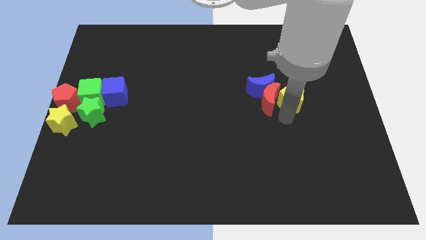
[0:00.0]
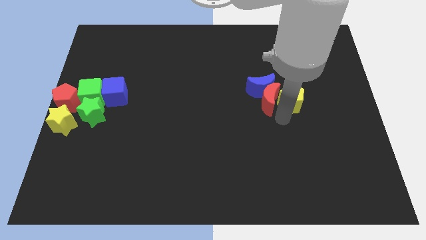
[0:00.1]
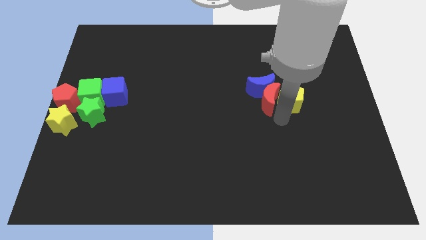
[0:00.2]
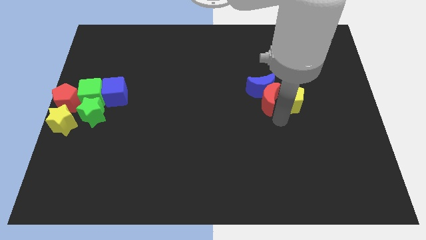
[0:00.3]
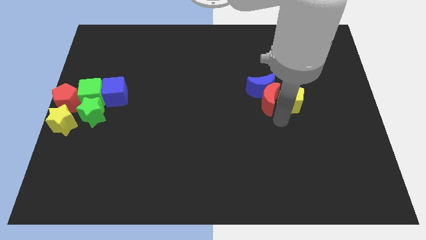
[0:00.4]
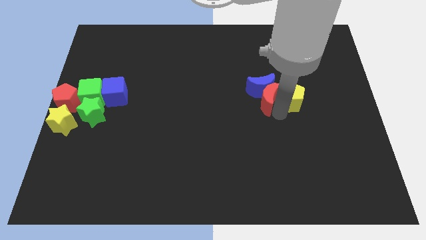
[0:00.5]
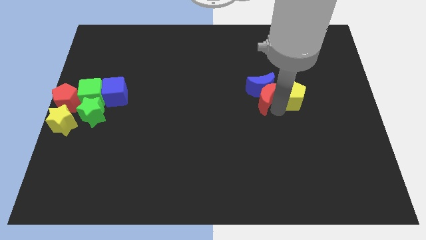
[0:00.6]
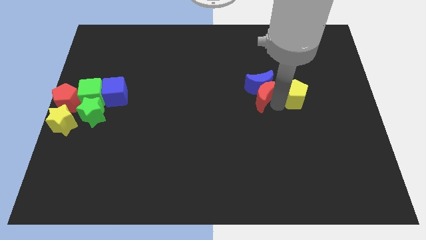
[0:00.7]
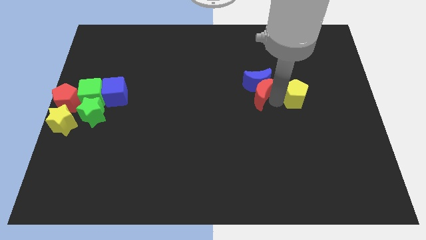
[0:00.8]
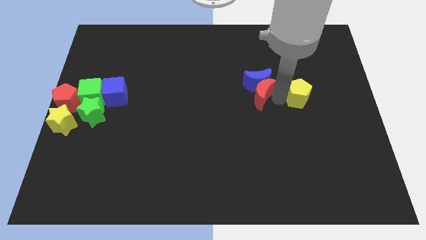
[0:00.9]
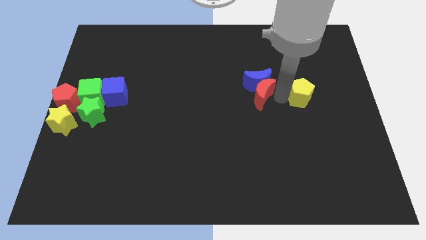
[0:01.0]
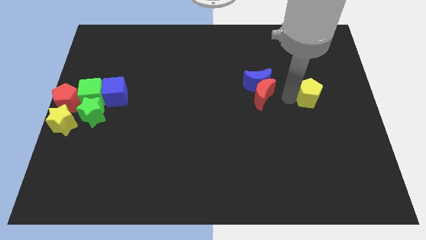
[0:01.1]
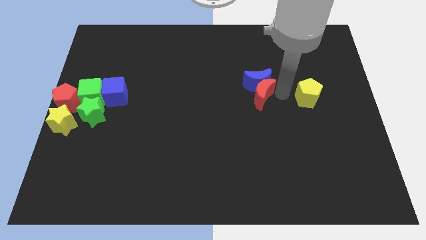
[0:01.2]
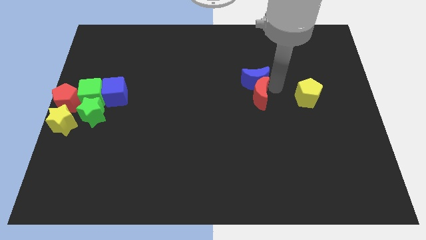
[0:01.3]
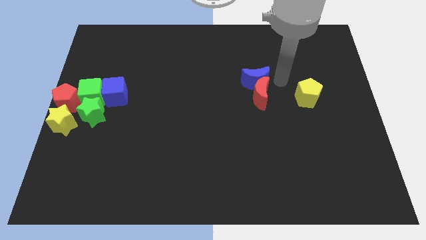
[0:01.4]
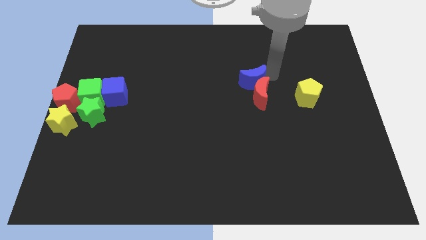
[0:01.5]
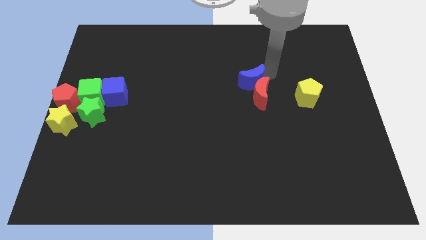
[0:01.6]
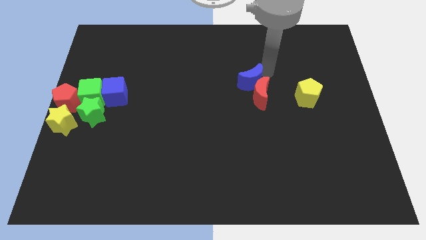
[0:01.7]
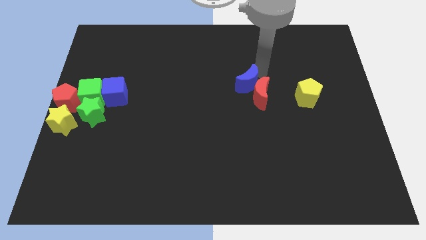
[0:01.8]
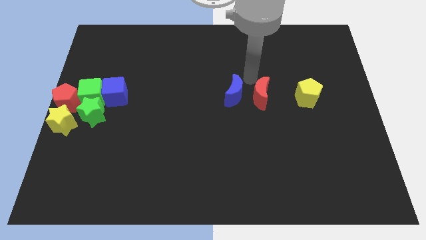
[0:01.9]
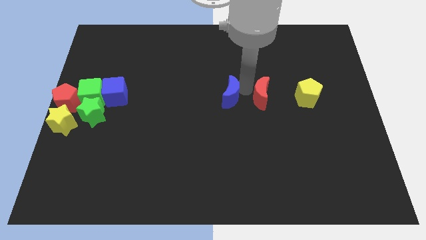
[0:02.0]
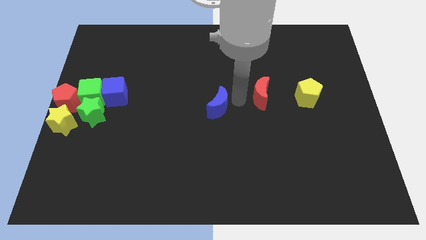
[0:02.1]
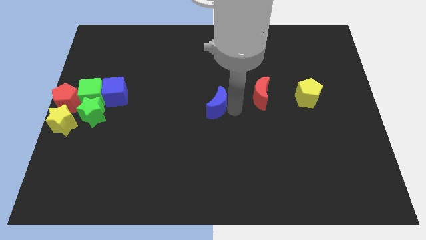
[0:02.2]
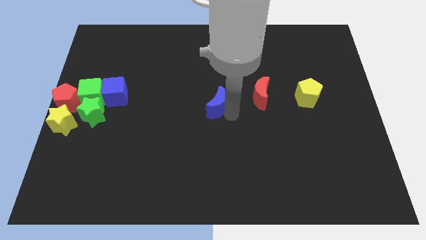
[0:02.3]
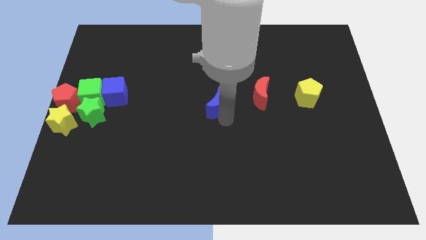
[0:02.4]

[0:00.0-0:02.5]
separate the yellow pentagon blue crescent from red moon

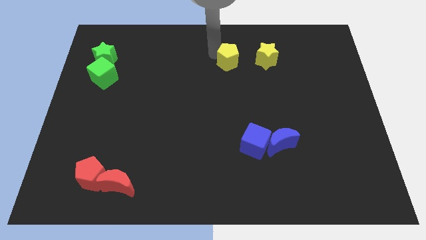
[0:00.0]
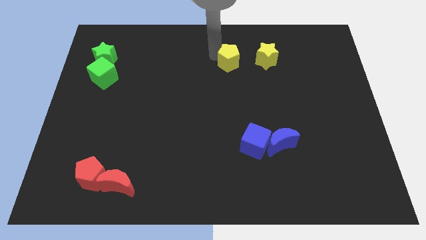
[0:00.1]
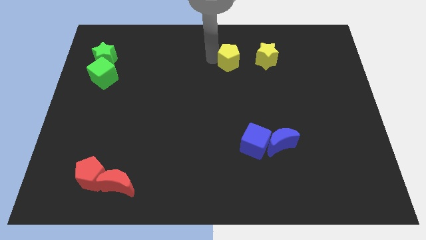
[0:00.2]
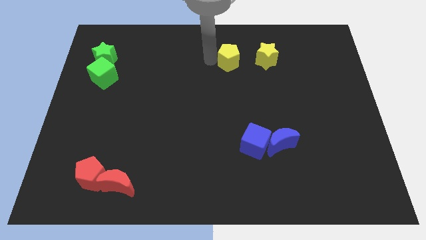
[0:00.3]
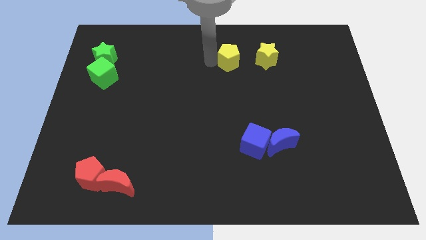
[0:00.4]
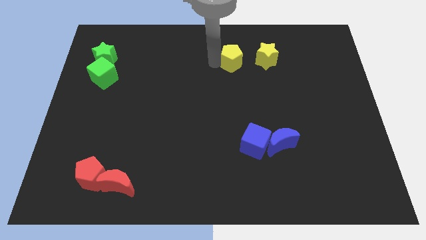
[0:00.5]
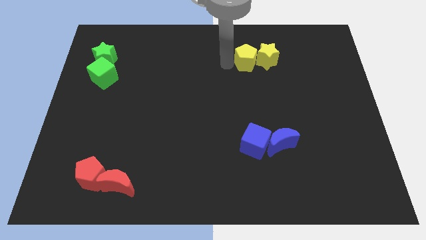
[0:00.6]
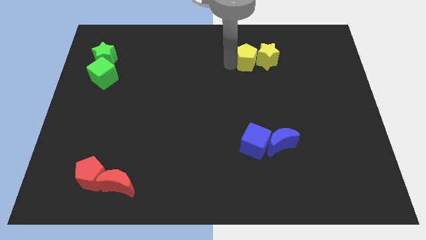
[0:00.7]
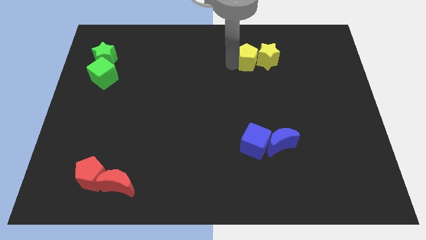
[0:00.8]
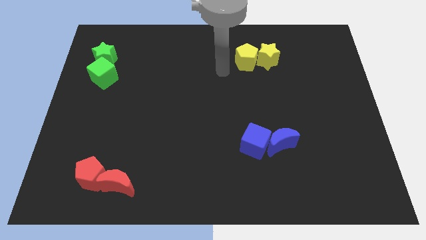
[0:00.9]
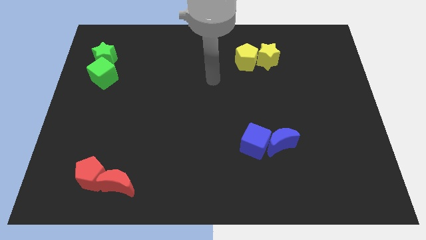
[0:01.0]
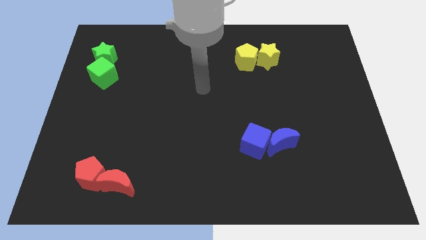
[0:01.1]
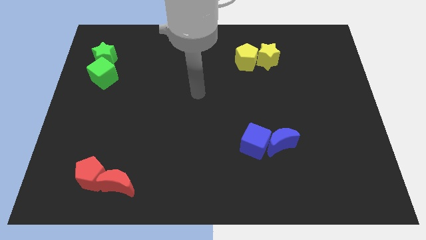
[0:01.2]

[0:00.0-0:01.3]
push yellow pentagon into yellow star

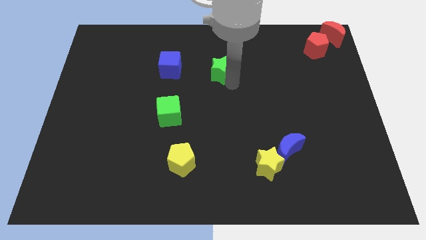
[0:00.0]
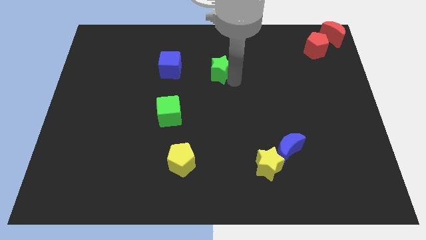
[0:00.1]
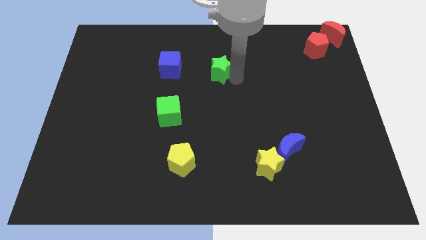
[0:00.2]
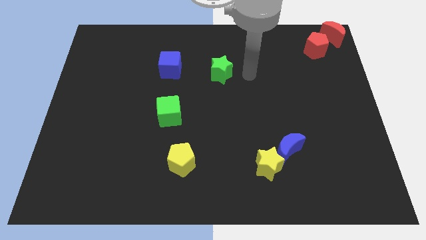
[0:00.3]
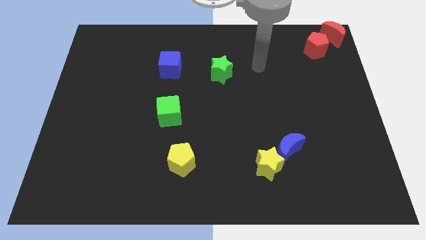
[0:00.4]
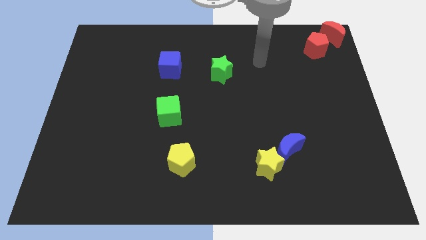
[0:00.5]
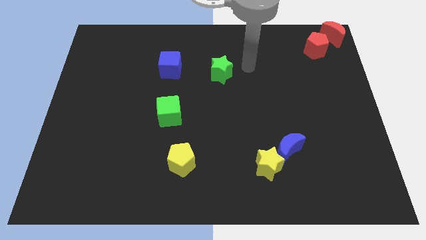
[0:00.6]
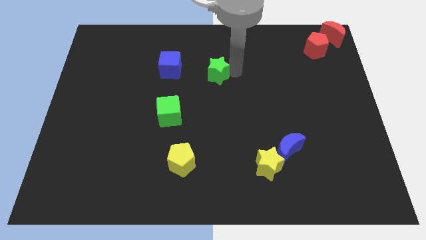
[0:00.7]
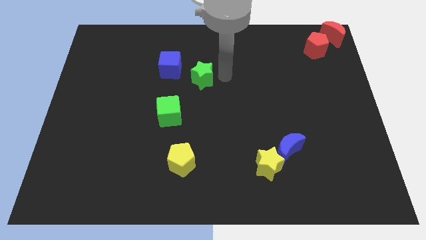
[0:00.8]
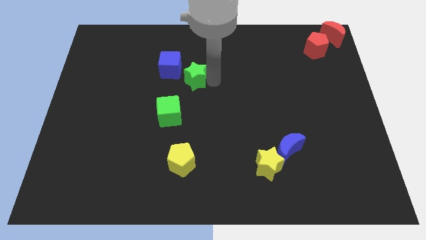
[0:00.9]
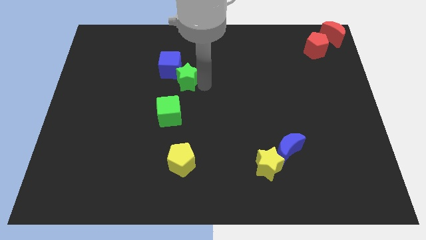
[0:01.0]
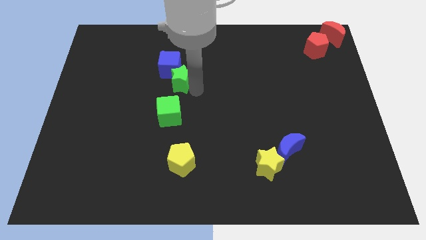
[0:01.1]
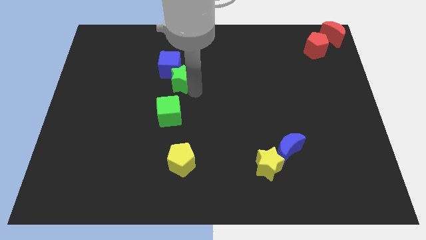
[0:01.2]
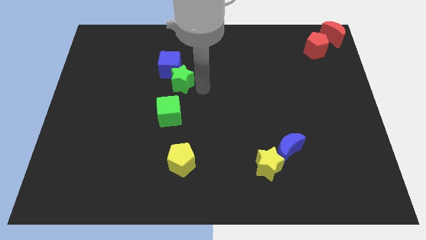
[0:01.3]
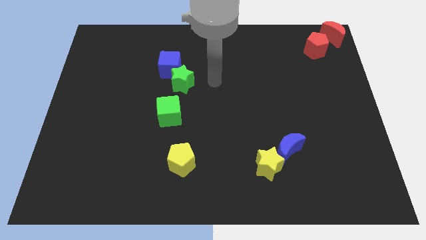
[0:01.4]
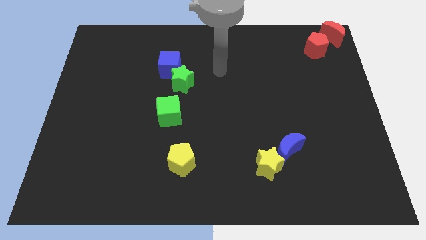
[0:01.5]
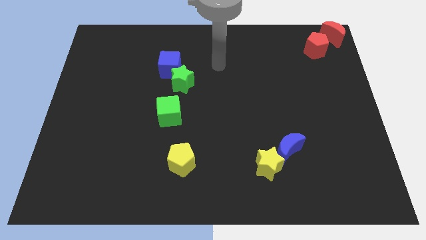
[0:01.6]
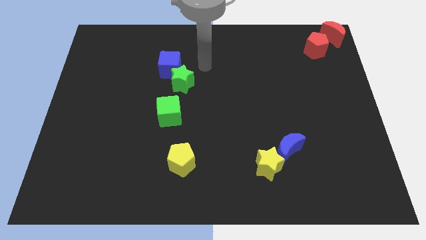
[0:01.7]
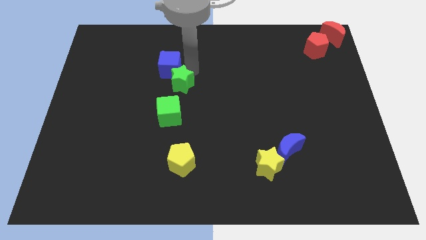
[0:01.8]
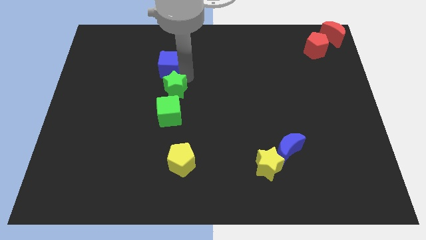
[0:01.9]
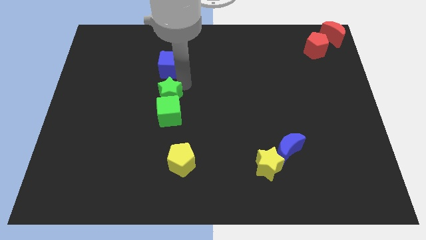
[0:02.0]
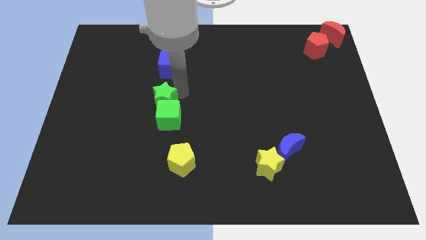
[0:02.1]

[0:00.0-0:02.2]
move the green star into the green cube

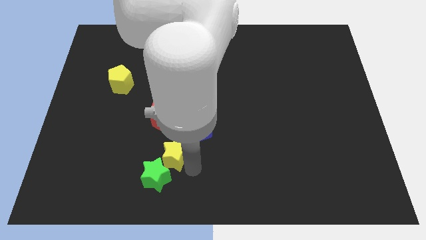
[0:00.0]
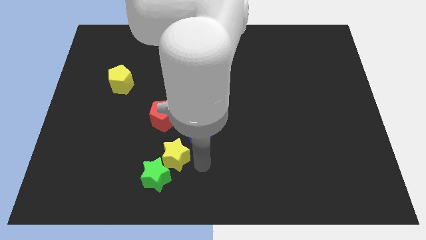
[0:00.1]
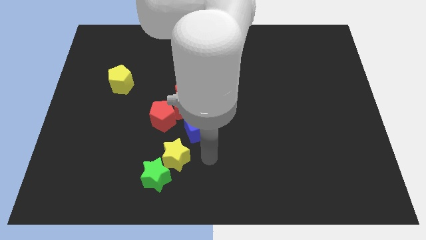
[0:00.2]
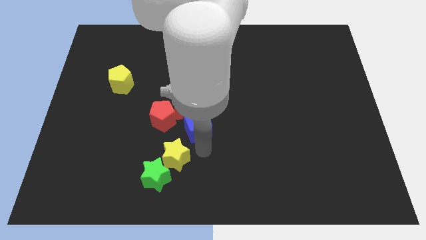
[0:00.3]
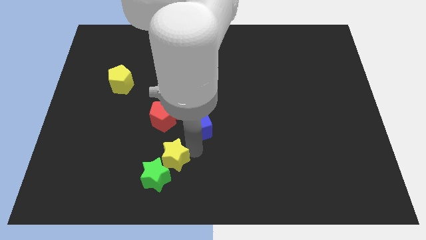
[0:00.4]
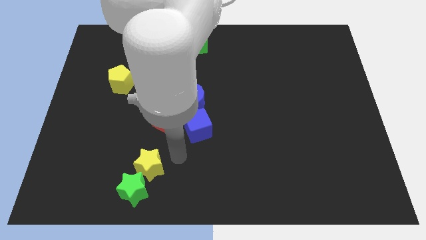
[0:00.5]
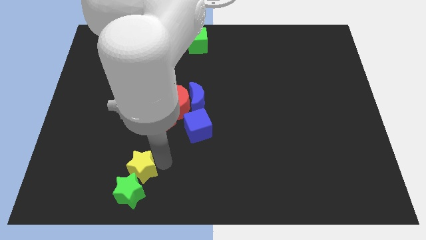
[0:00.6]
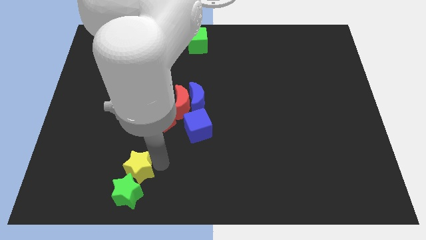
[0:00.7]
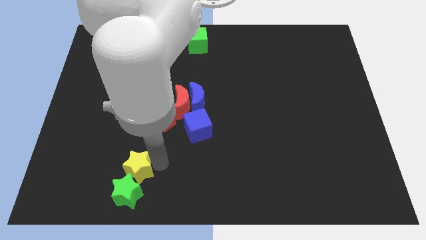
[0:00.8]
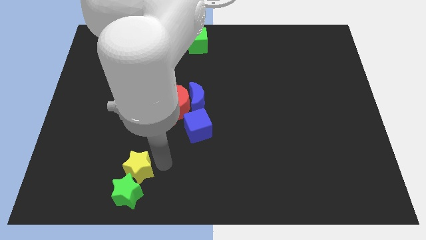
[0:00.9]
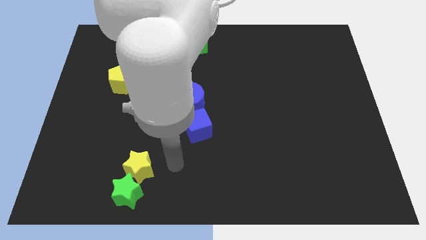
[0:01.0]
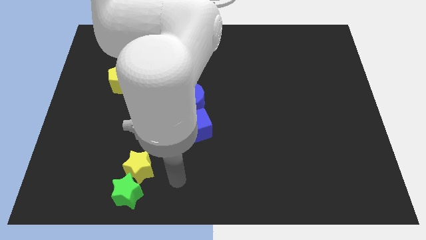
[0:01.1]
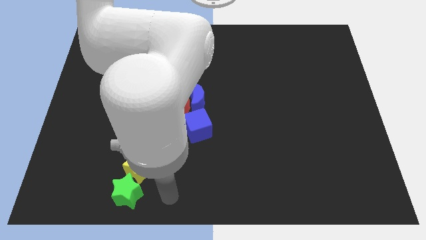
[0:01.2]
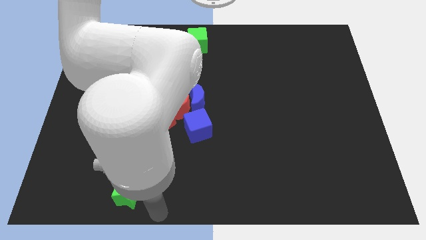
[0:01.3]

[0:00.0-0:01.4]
move the group of stars towards bottom left side of the board

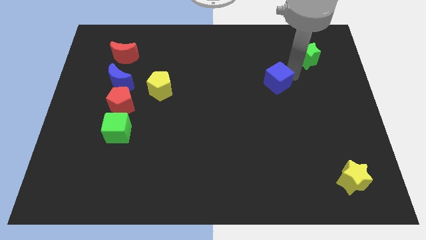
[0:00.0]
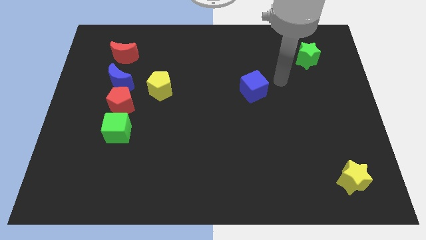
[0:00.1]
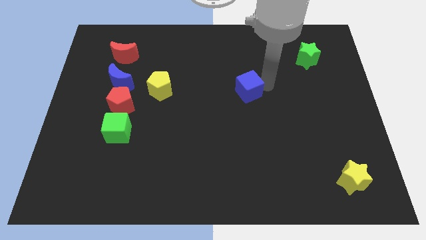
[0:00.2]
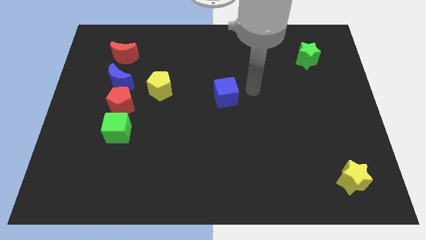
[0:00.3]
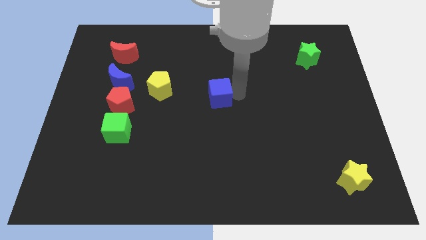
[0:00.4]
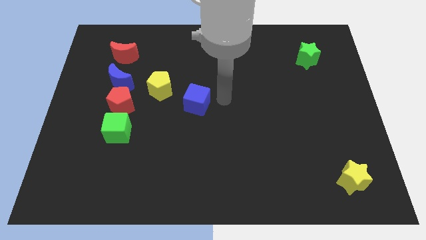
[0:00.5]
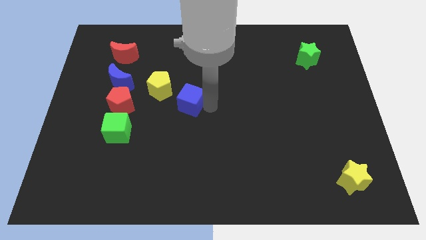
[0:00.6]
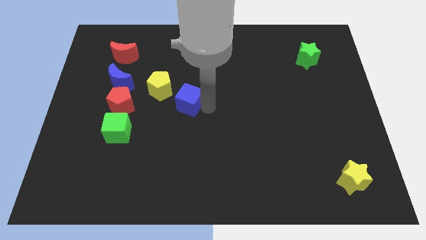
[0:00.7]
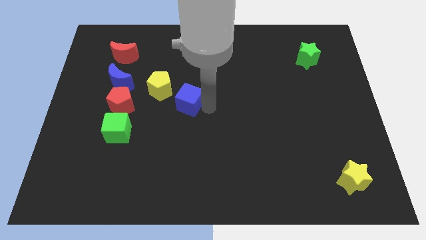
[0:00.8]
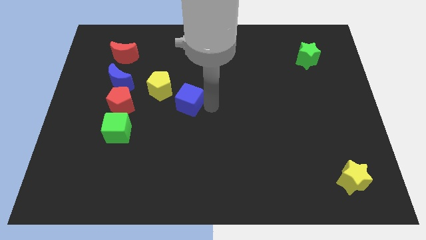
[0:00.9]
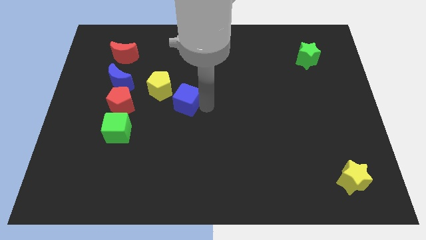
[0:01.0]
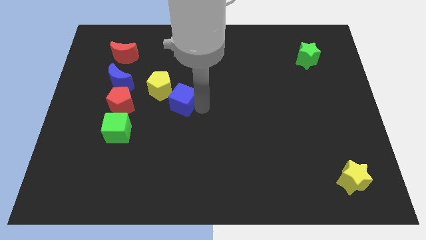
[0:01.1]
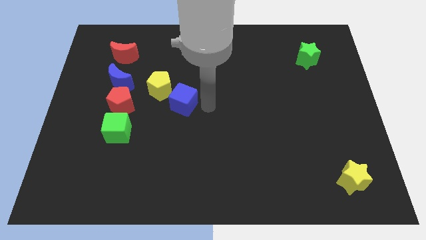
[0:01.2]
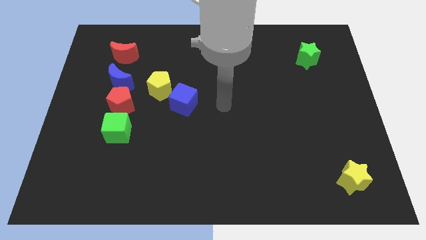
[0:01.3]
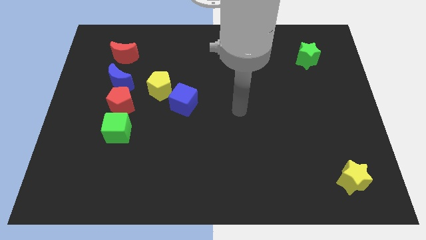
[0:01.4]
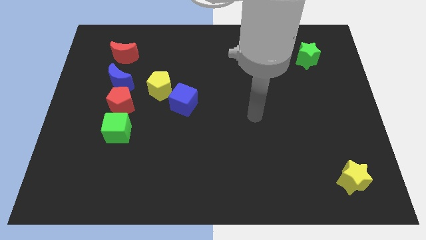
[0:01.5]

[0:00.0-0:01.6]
slide the blue cube close to the yellow pentagon
